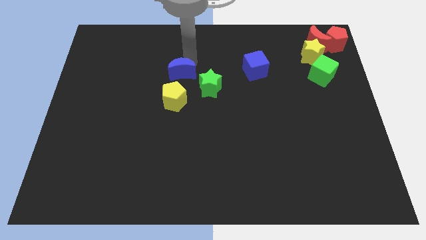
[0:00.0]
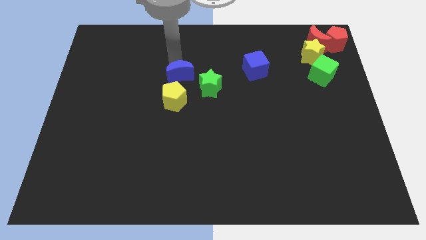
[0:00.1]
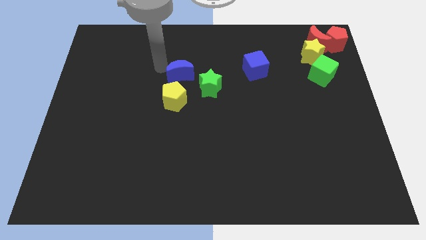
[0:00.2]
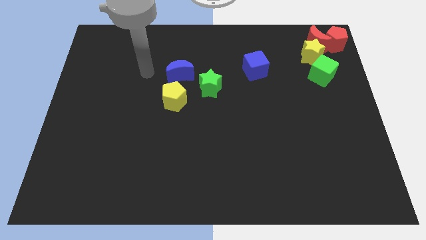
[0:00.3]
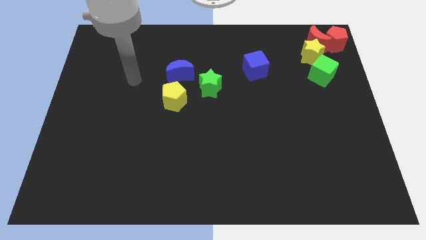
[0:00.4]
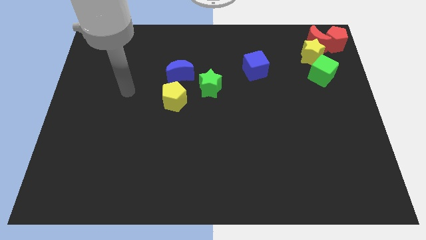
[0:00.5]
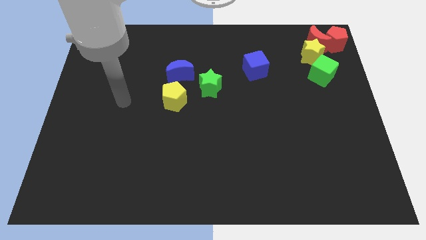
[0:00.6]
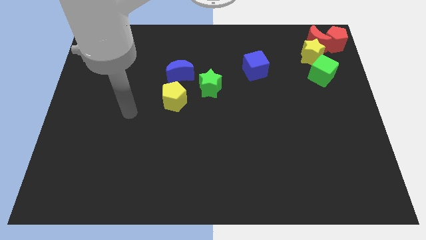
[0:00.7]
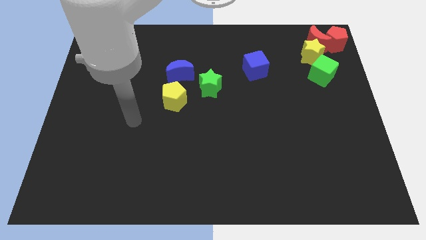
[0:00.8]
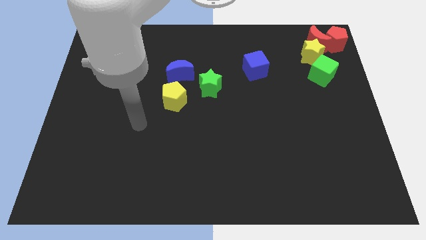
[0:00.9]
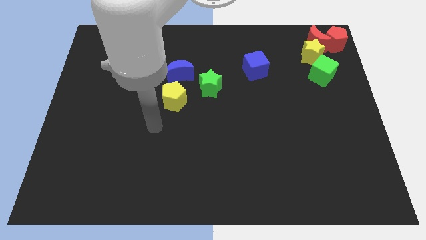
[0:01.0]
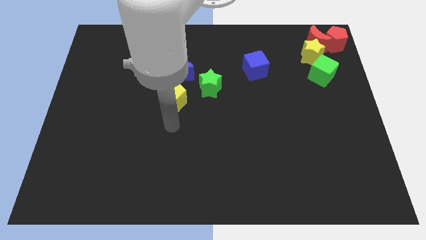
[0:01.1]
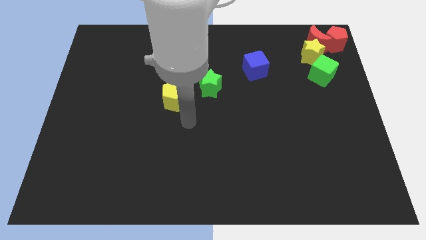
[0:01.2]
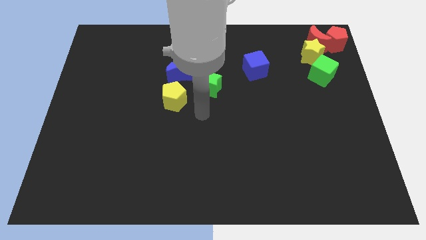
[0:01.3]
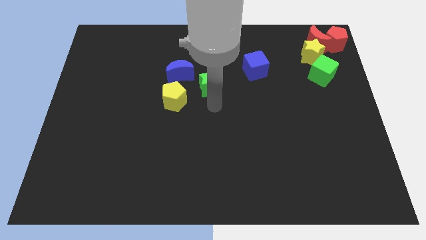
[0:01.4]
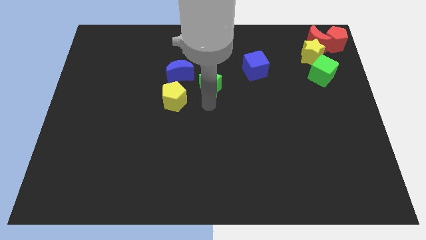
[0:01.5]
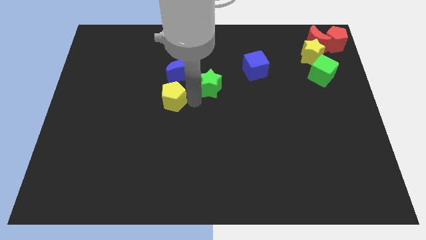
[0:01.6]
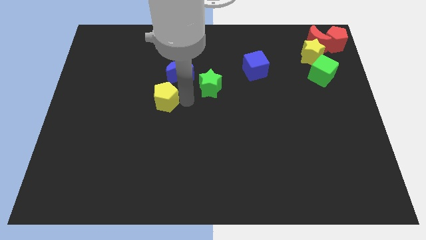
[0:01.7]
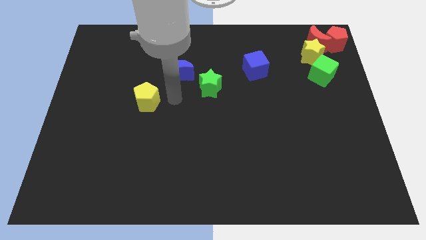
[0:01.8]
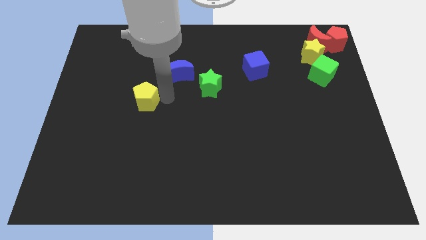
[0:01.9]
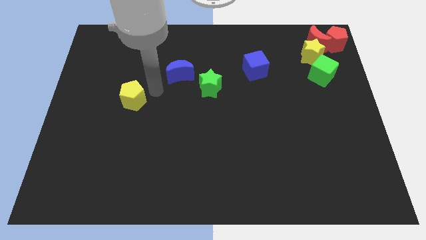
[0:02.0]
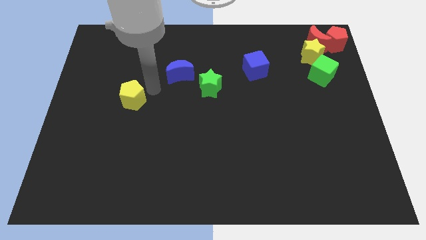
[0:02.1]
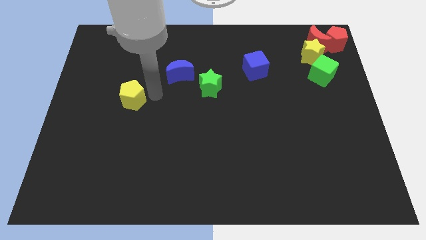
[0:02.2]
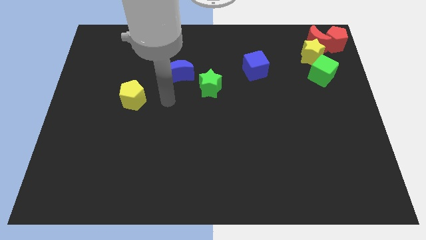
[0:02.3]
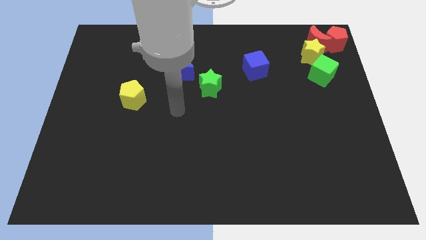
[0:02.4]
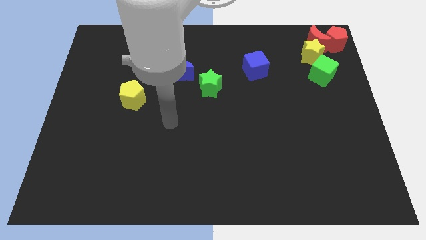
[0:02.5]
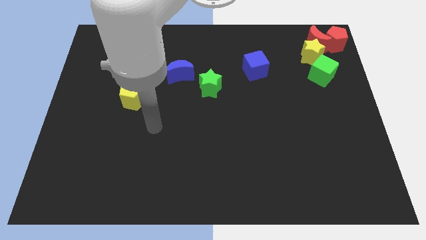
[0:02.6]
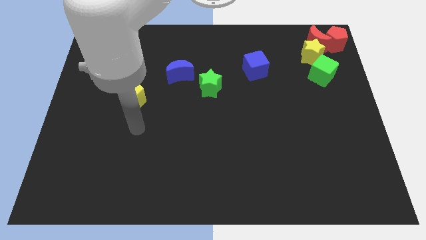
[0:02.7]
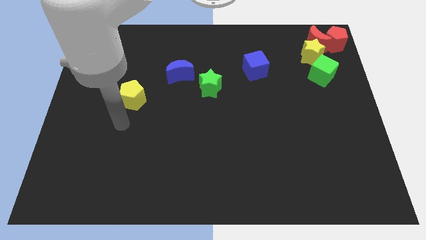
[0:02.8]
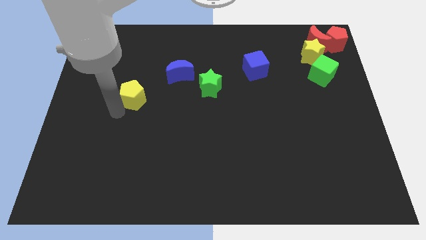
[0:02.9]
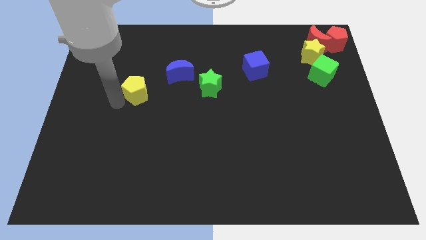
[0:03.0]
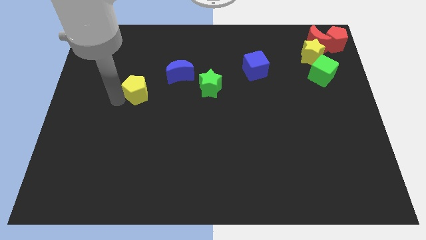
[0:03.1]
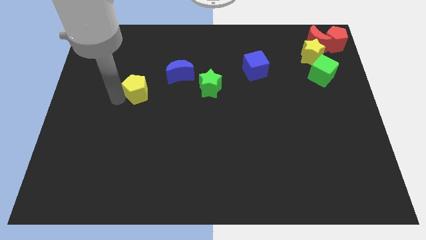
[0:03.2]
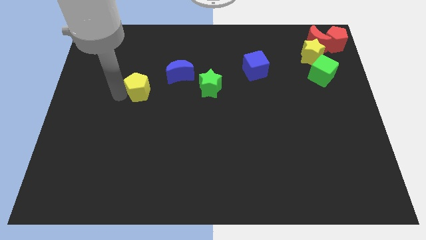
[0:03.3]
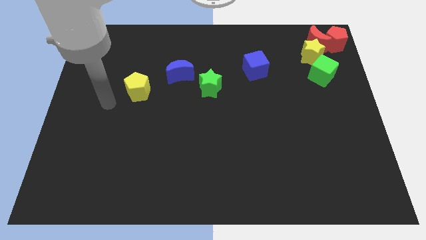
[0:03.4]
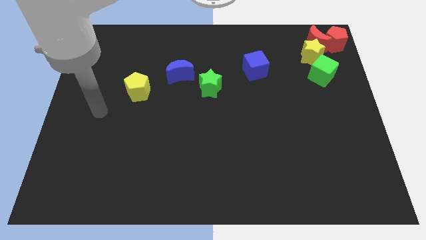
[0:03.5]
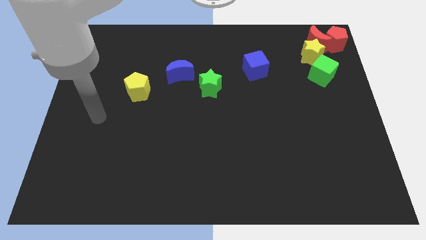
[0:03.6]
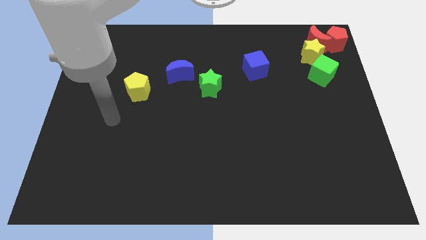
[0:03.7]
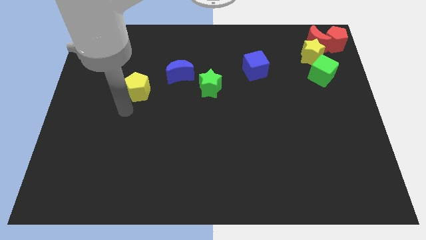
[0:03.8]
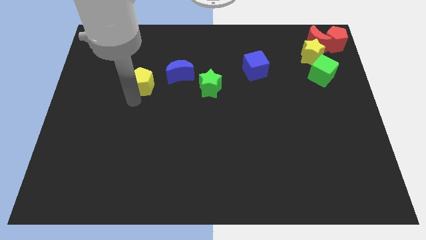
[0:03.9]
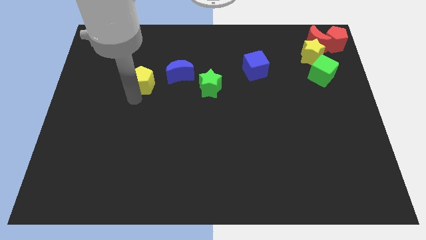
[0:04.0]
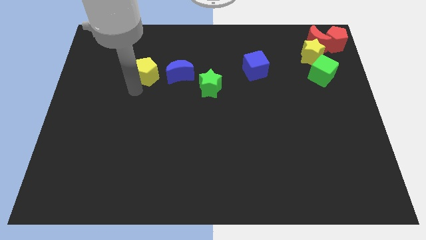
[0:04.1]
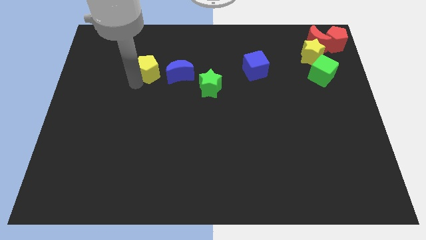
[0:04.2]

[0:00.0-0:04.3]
move the yellow pentagon to the left of blue moon

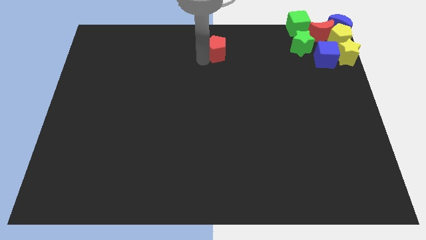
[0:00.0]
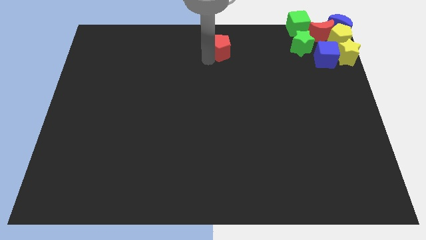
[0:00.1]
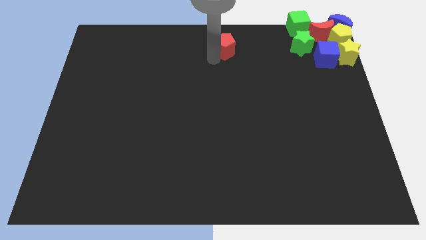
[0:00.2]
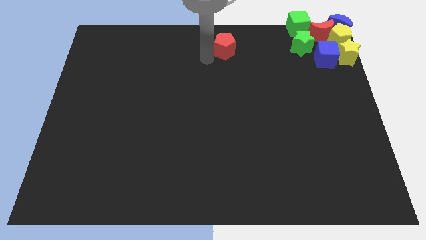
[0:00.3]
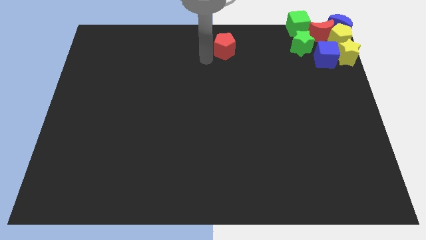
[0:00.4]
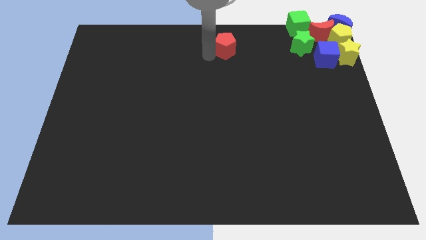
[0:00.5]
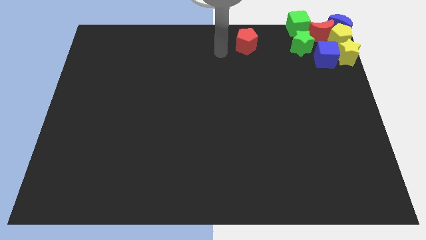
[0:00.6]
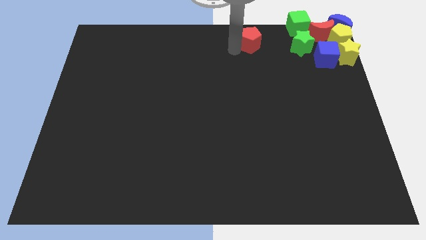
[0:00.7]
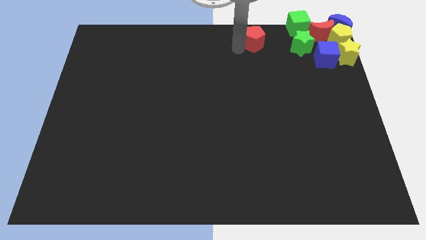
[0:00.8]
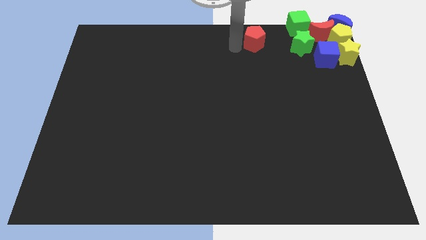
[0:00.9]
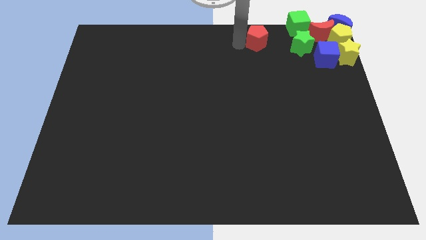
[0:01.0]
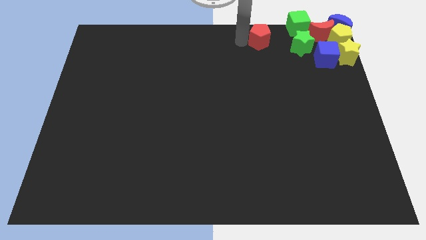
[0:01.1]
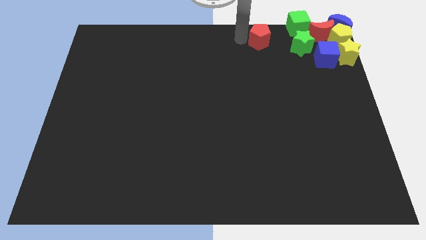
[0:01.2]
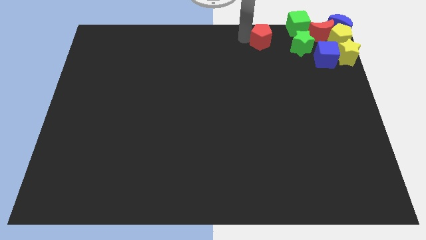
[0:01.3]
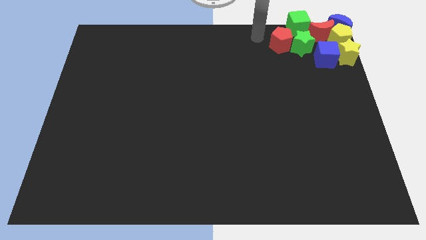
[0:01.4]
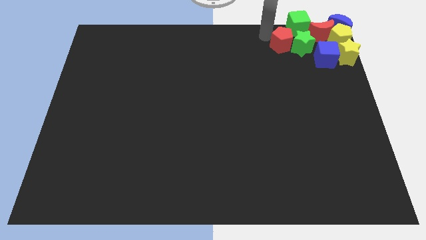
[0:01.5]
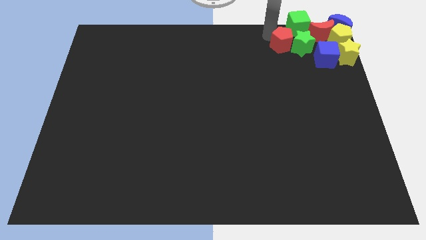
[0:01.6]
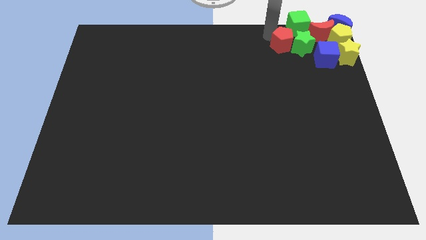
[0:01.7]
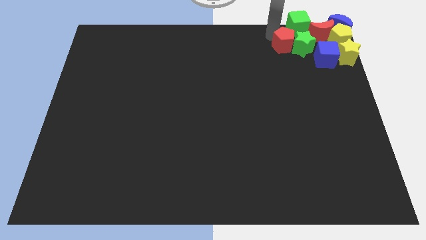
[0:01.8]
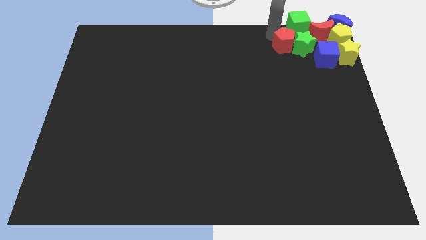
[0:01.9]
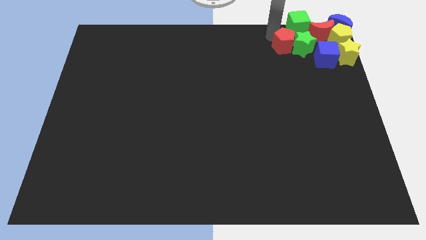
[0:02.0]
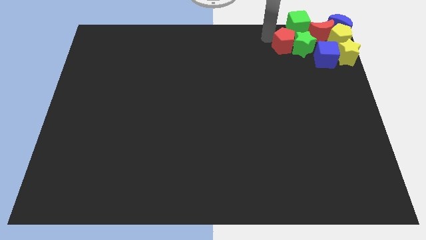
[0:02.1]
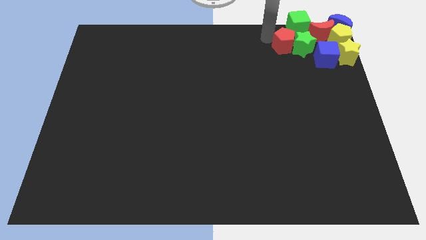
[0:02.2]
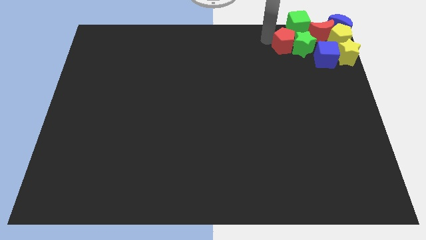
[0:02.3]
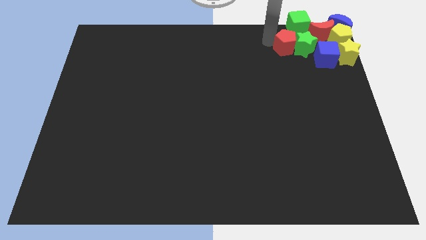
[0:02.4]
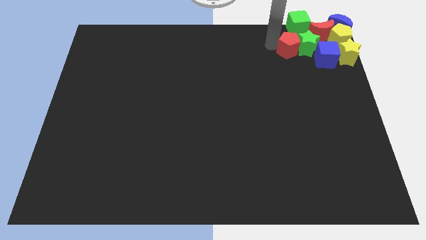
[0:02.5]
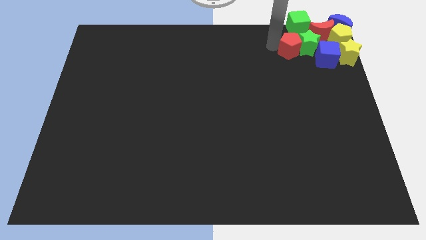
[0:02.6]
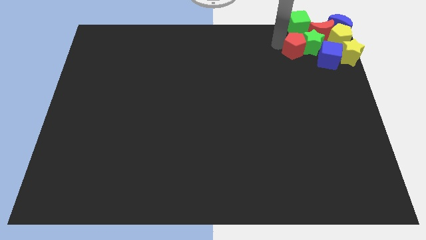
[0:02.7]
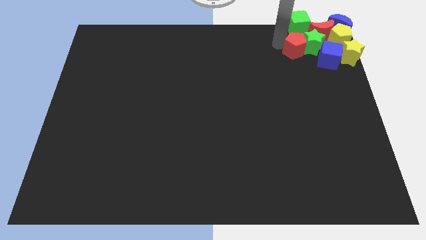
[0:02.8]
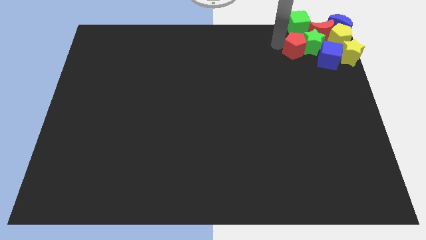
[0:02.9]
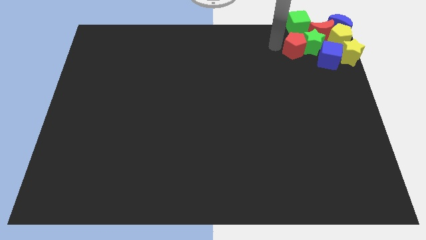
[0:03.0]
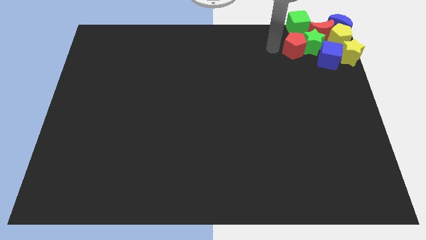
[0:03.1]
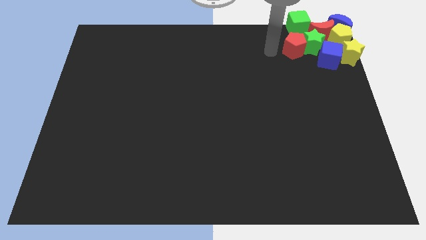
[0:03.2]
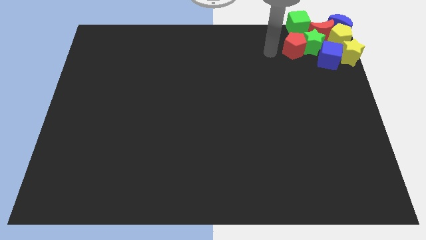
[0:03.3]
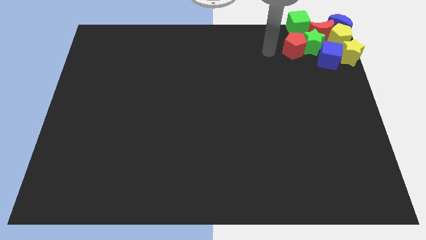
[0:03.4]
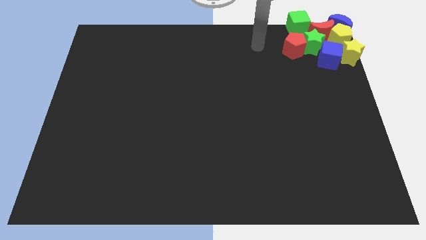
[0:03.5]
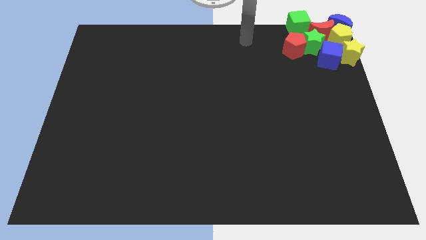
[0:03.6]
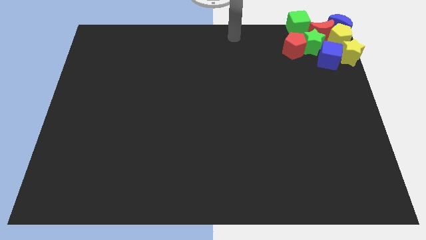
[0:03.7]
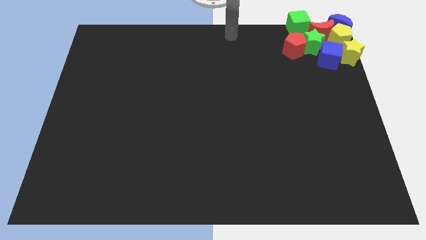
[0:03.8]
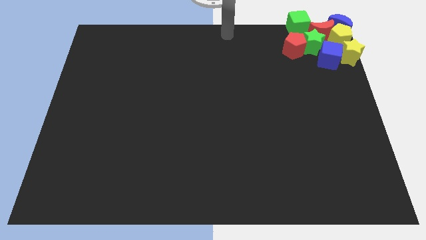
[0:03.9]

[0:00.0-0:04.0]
push the green star into red crescent using the red penatgon

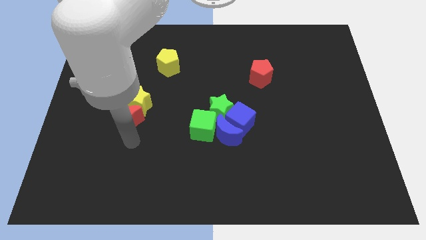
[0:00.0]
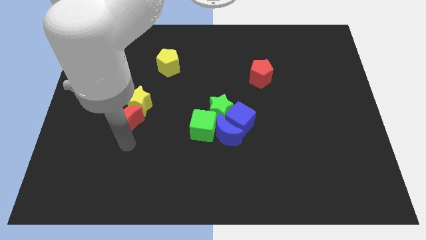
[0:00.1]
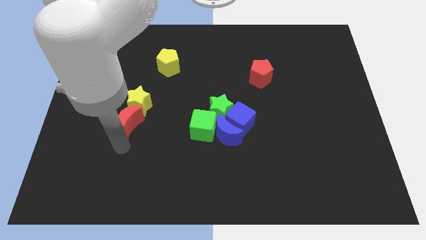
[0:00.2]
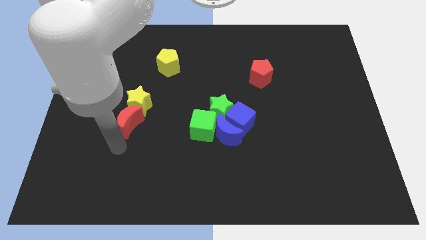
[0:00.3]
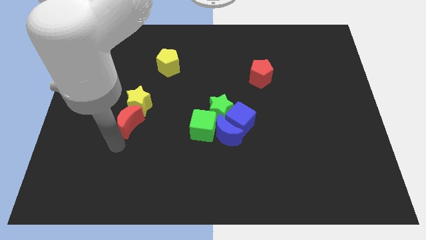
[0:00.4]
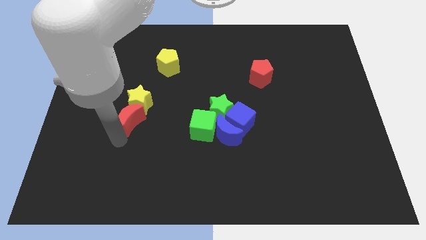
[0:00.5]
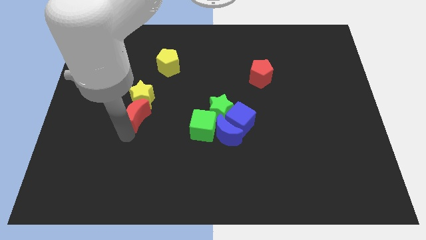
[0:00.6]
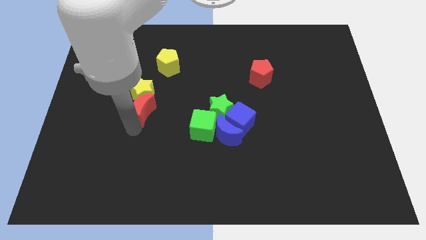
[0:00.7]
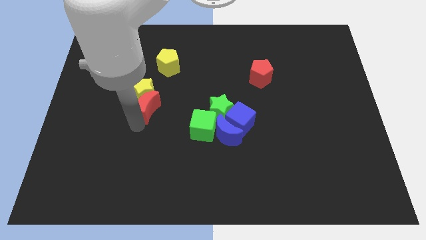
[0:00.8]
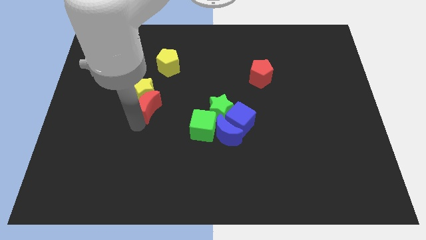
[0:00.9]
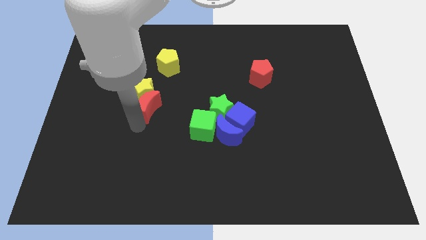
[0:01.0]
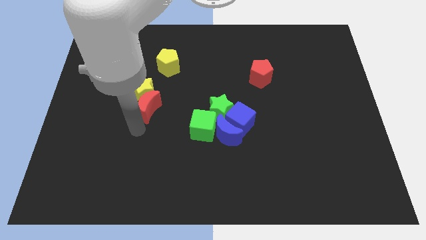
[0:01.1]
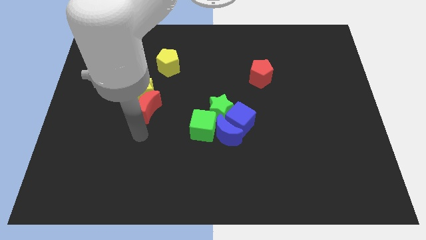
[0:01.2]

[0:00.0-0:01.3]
move the red crescent along with the yellow star upwards
